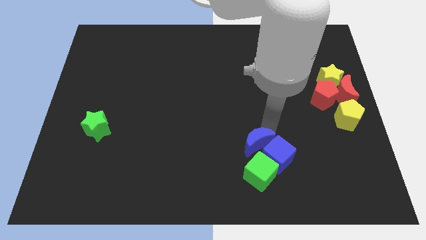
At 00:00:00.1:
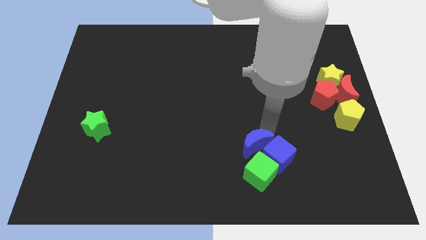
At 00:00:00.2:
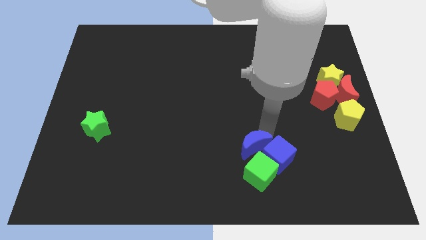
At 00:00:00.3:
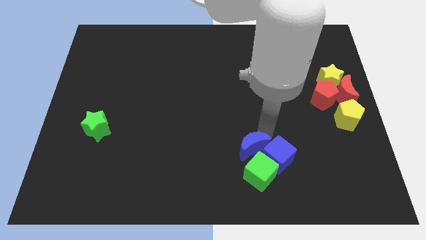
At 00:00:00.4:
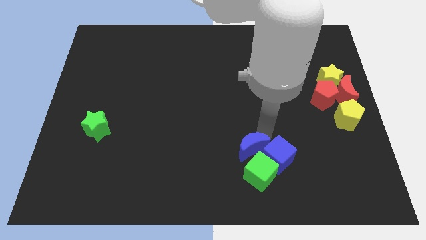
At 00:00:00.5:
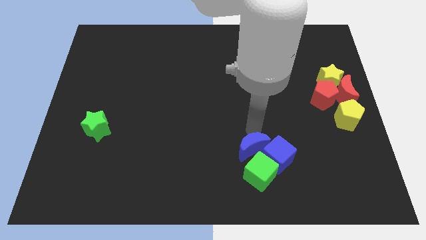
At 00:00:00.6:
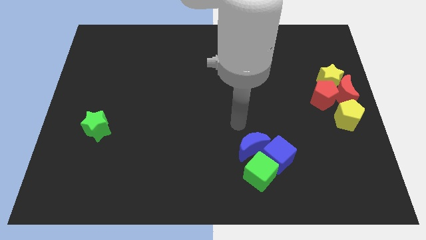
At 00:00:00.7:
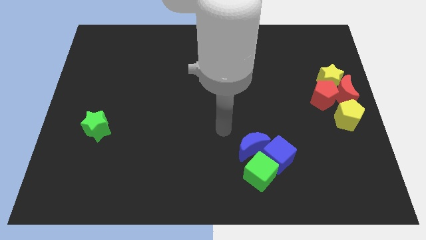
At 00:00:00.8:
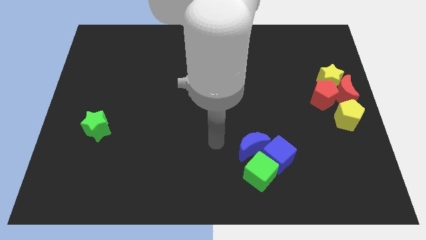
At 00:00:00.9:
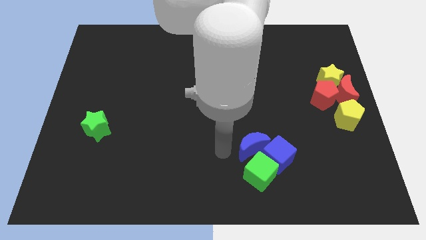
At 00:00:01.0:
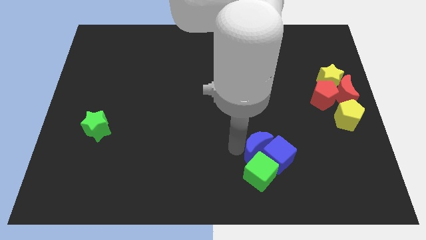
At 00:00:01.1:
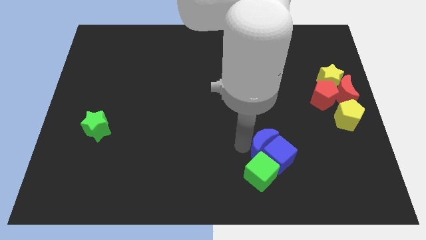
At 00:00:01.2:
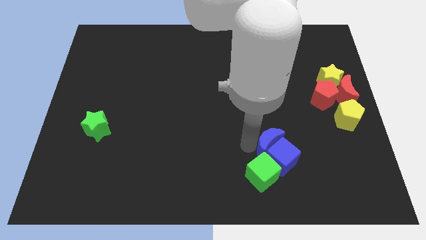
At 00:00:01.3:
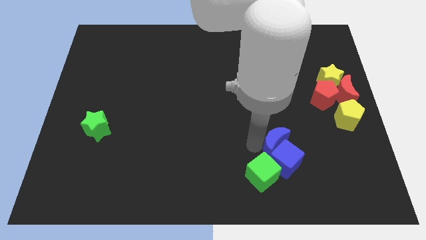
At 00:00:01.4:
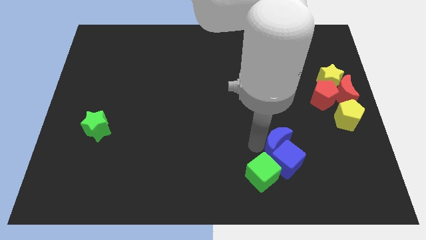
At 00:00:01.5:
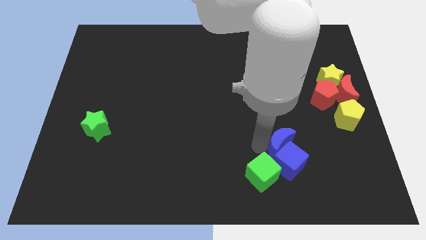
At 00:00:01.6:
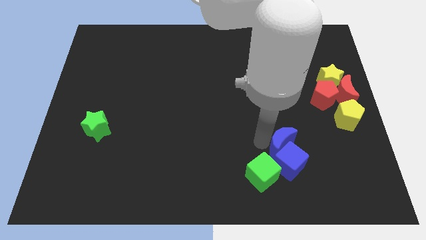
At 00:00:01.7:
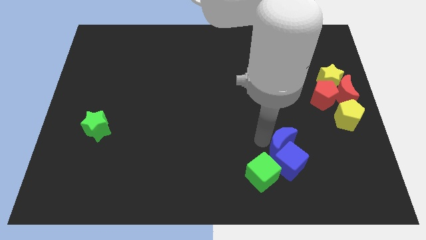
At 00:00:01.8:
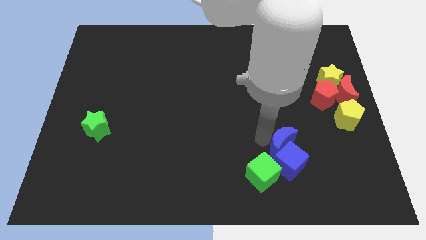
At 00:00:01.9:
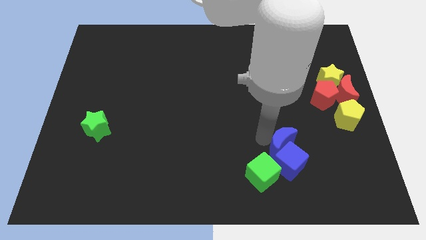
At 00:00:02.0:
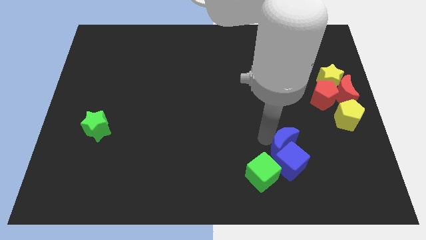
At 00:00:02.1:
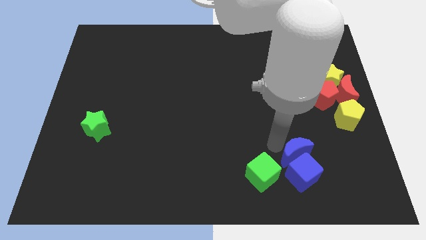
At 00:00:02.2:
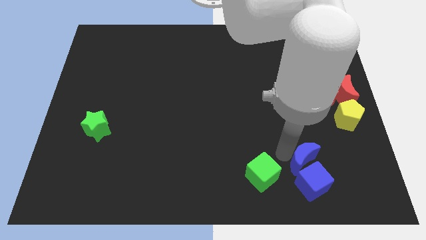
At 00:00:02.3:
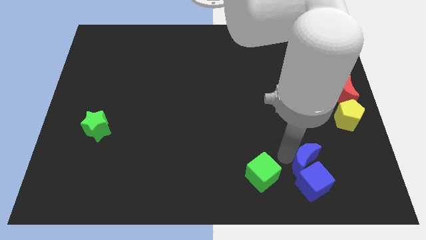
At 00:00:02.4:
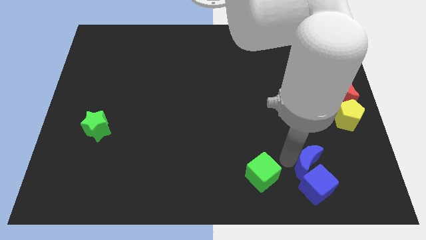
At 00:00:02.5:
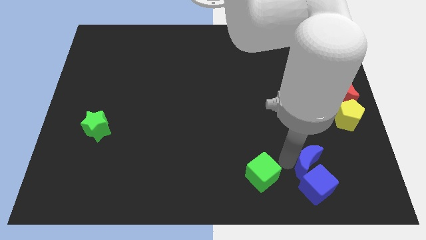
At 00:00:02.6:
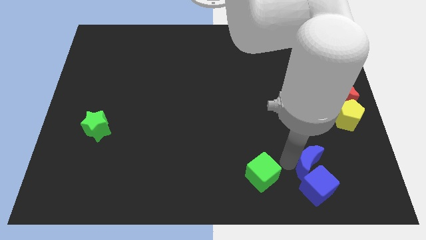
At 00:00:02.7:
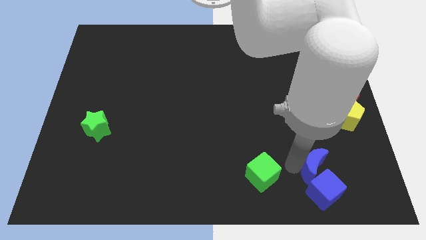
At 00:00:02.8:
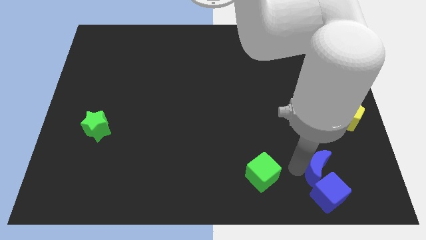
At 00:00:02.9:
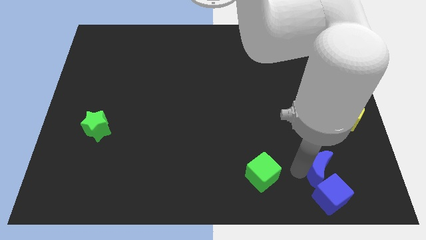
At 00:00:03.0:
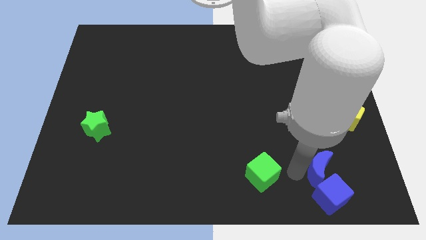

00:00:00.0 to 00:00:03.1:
move the blue cube to the bottom right

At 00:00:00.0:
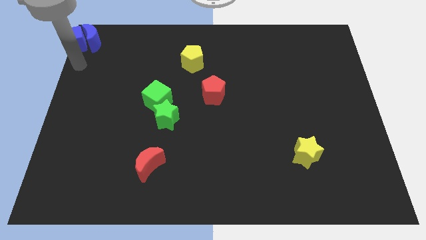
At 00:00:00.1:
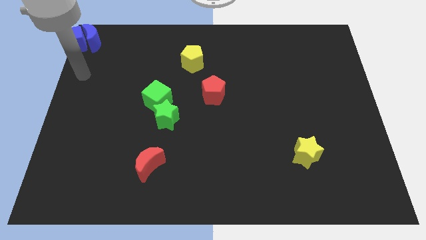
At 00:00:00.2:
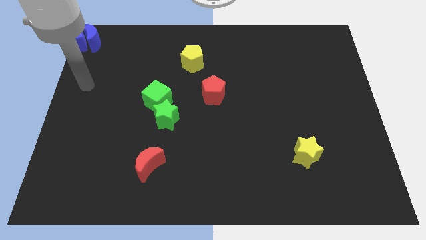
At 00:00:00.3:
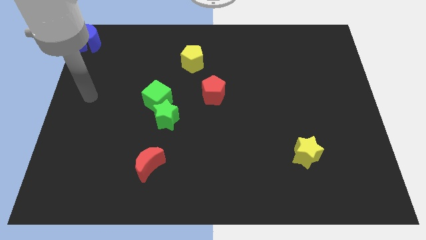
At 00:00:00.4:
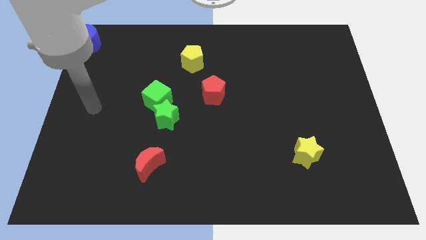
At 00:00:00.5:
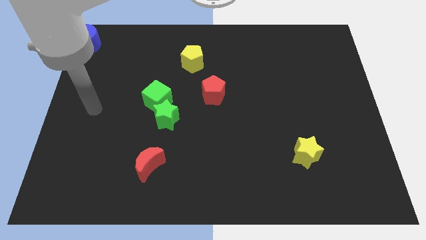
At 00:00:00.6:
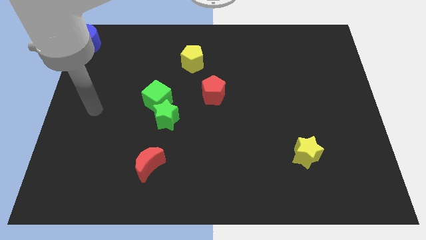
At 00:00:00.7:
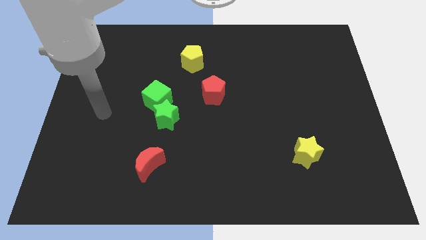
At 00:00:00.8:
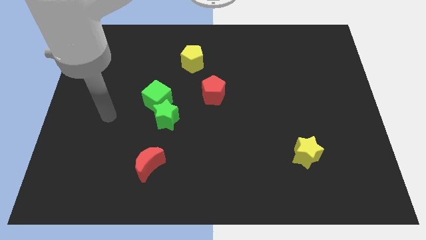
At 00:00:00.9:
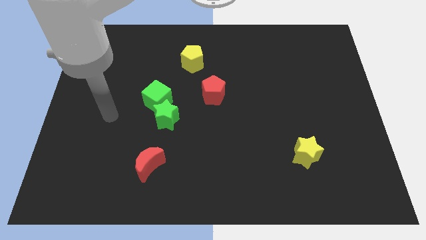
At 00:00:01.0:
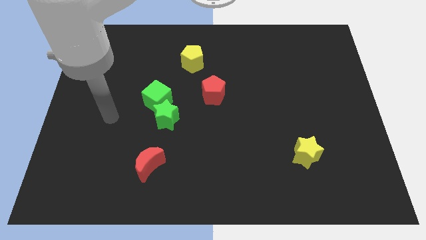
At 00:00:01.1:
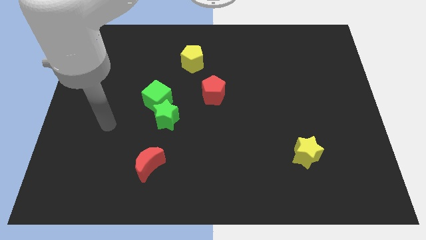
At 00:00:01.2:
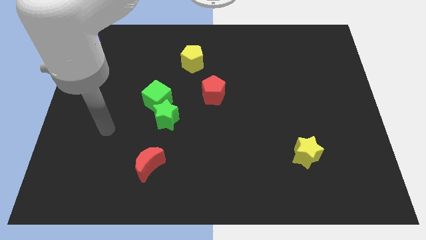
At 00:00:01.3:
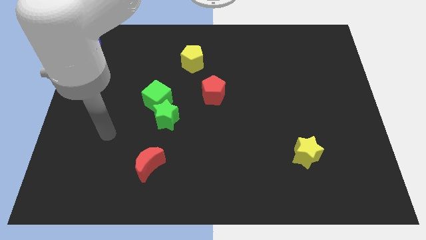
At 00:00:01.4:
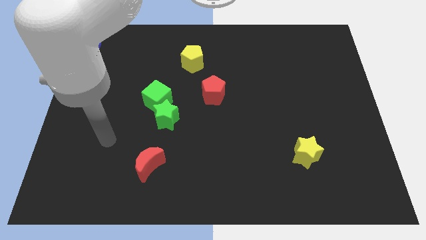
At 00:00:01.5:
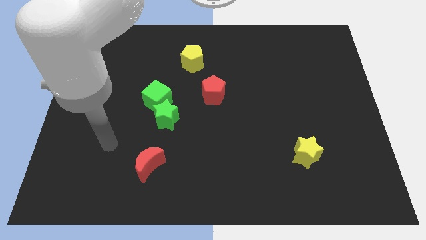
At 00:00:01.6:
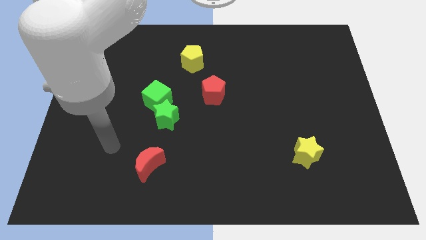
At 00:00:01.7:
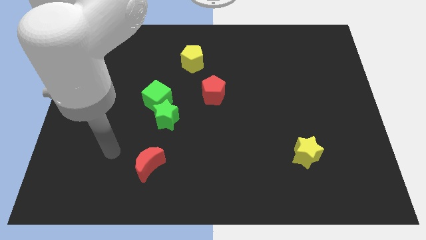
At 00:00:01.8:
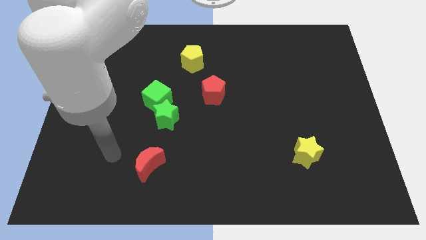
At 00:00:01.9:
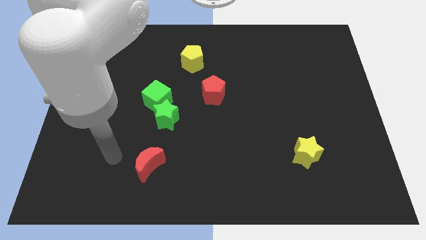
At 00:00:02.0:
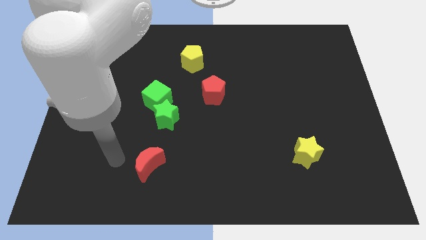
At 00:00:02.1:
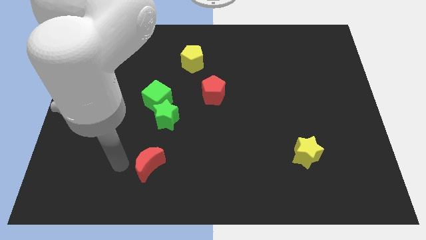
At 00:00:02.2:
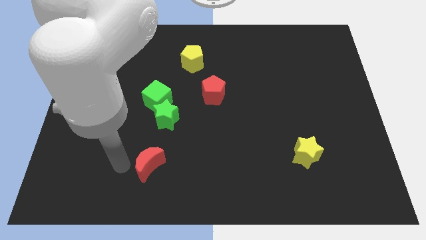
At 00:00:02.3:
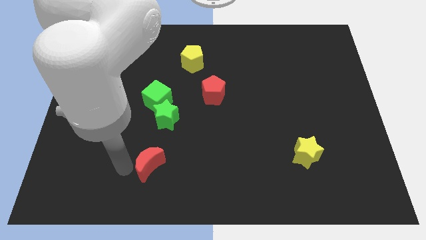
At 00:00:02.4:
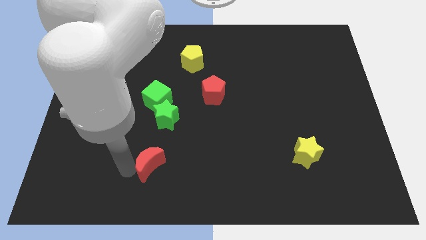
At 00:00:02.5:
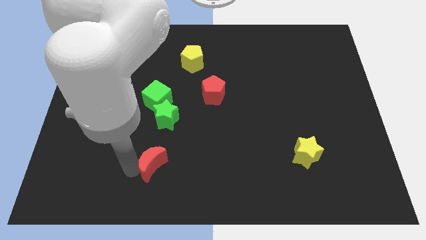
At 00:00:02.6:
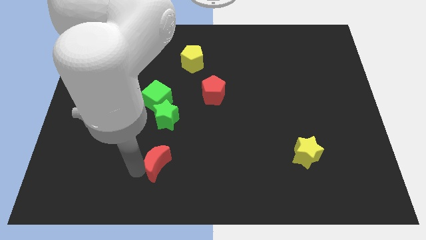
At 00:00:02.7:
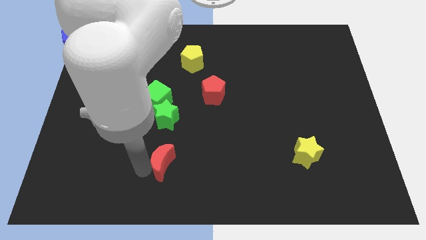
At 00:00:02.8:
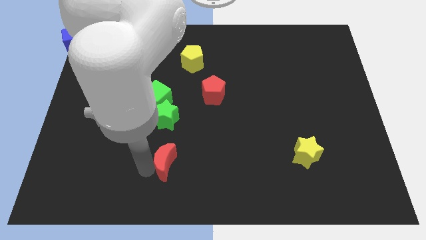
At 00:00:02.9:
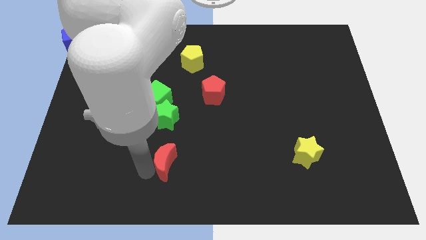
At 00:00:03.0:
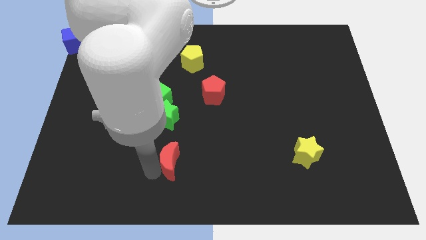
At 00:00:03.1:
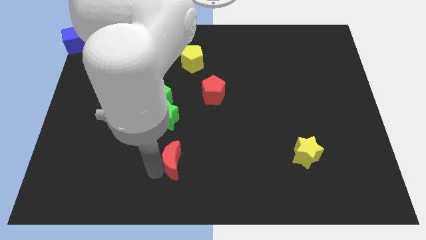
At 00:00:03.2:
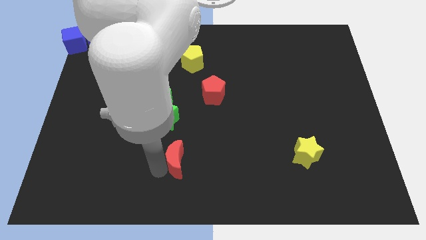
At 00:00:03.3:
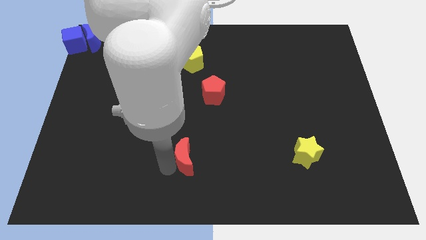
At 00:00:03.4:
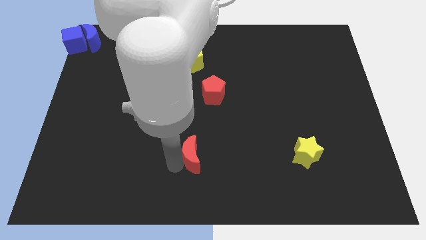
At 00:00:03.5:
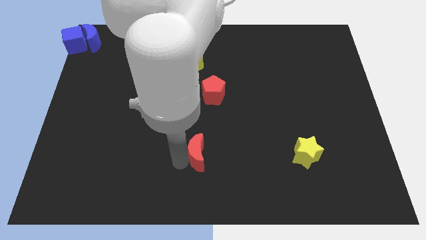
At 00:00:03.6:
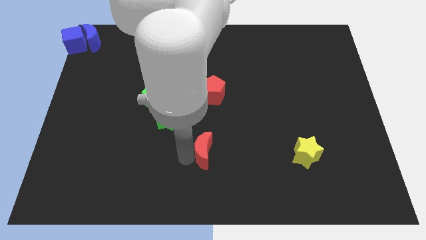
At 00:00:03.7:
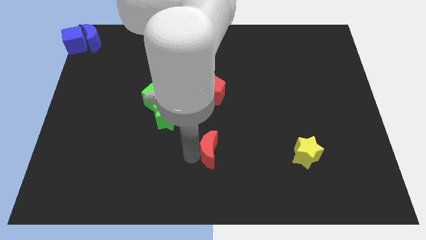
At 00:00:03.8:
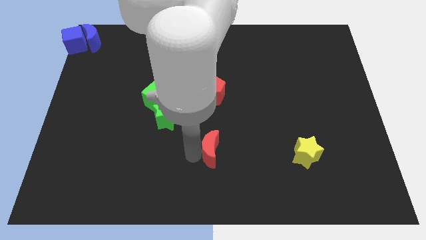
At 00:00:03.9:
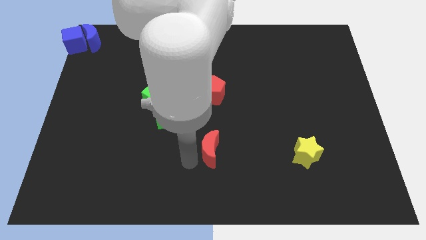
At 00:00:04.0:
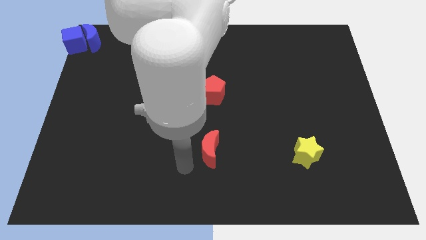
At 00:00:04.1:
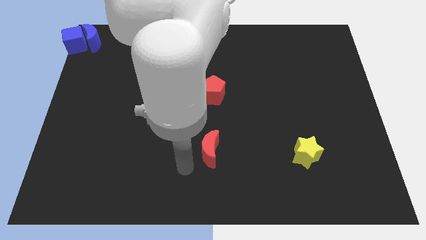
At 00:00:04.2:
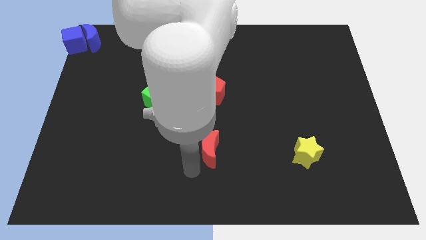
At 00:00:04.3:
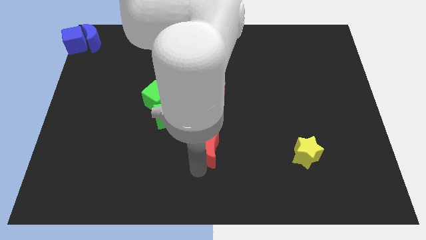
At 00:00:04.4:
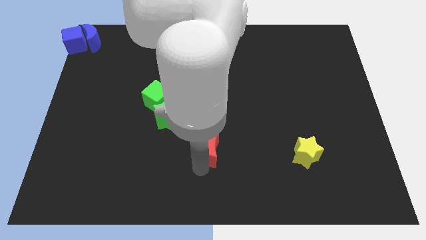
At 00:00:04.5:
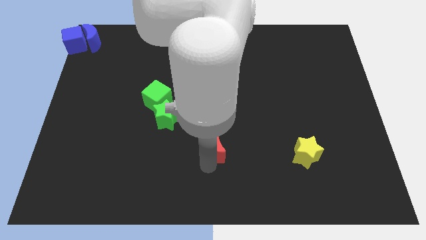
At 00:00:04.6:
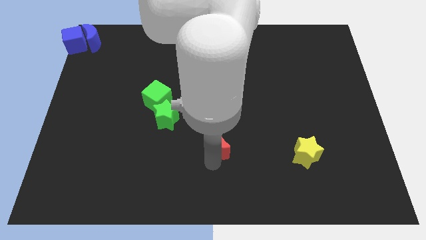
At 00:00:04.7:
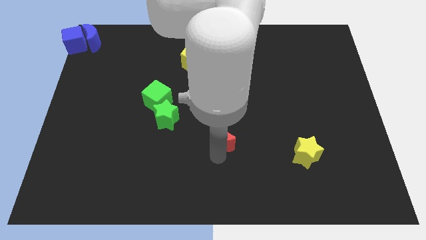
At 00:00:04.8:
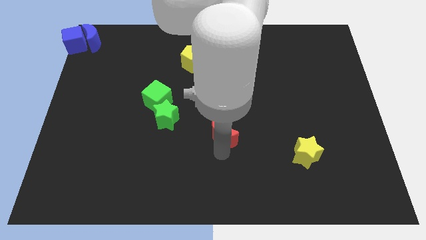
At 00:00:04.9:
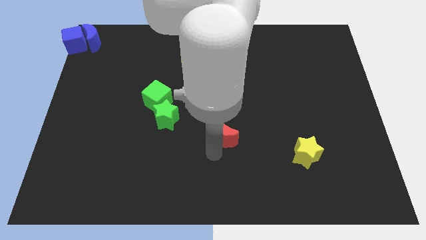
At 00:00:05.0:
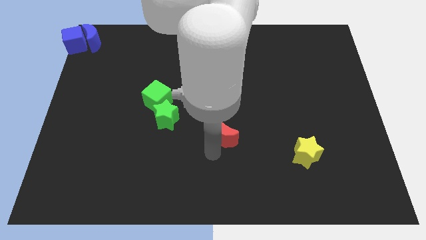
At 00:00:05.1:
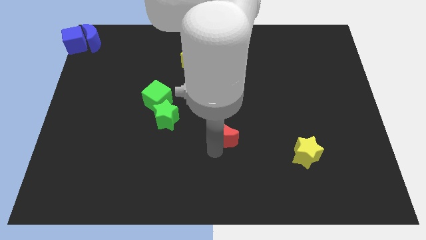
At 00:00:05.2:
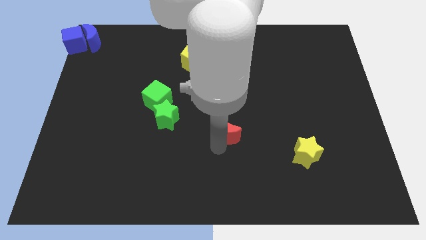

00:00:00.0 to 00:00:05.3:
place the red moon in between the green star and yellow star

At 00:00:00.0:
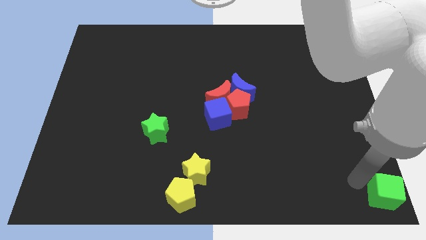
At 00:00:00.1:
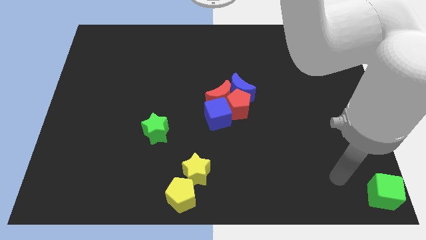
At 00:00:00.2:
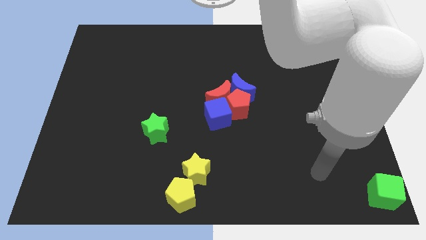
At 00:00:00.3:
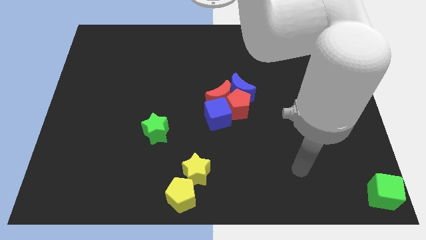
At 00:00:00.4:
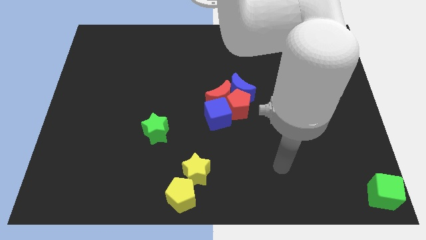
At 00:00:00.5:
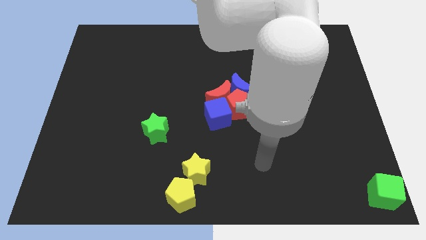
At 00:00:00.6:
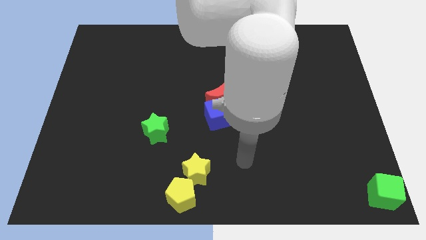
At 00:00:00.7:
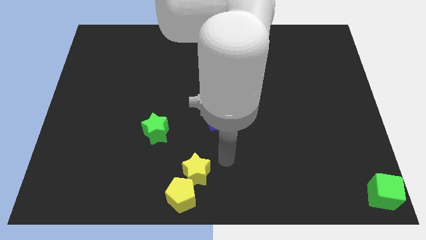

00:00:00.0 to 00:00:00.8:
move your hand away from the top left of the green cube
